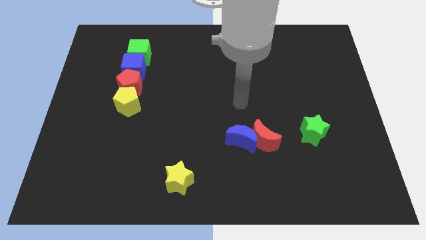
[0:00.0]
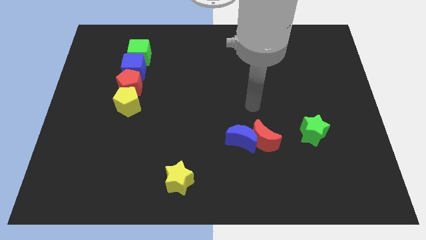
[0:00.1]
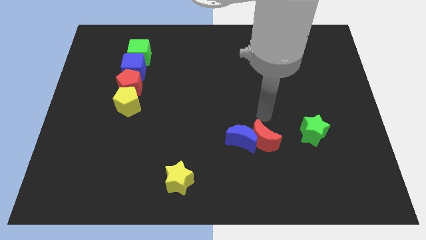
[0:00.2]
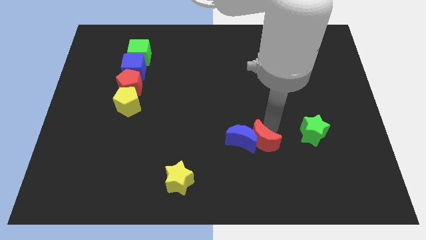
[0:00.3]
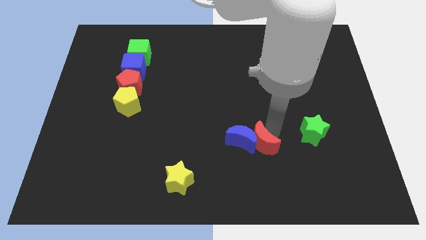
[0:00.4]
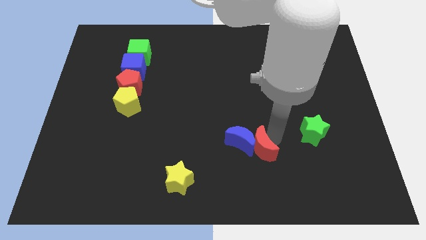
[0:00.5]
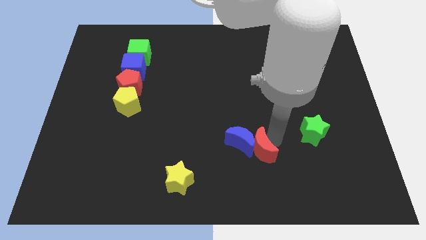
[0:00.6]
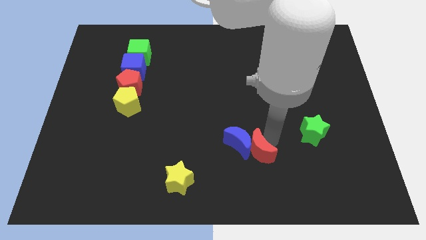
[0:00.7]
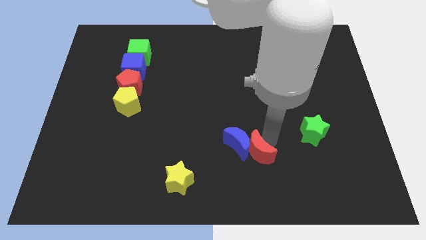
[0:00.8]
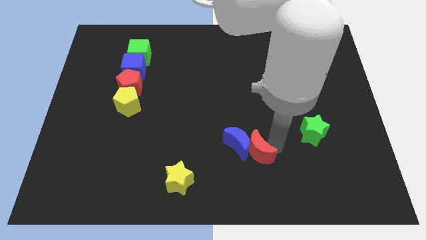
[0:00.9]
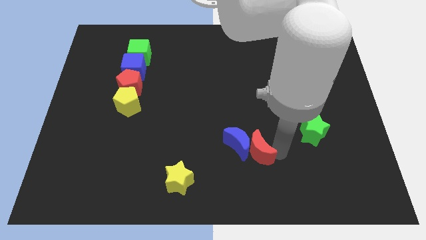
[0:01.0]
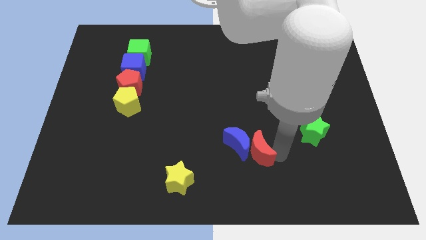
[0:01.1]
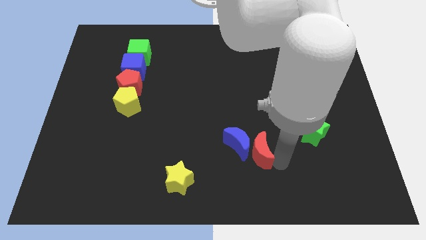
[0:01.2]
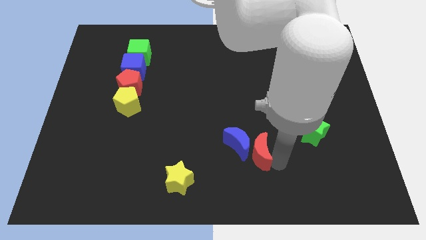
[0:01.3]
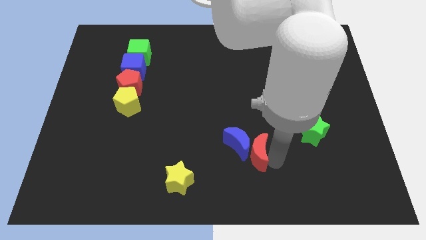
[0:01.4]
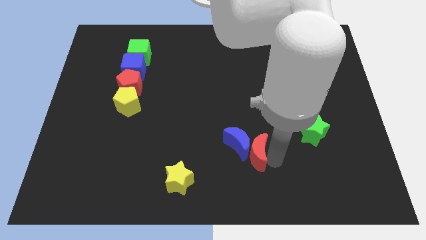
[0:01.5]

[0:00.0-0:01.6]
slightly push the red moon down

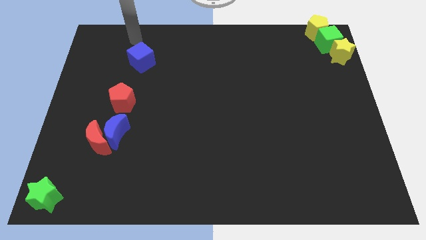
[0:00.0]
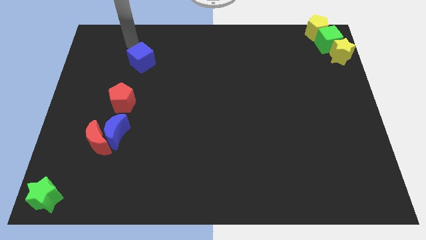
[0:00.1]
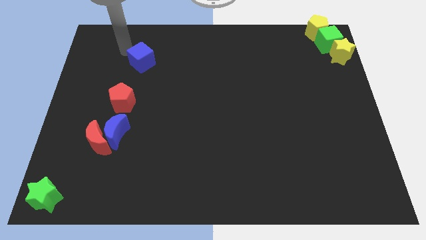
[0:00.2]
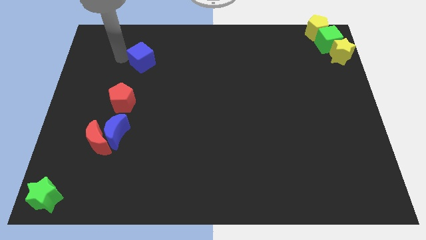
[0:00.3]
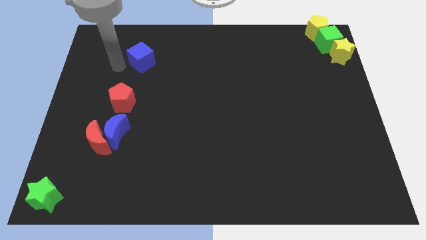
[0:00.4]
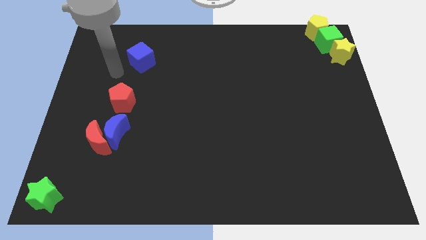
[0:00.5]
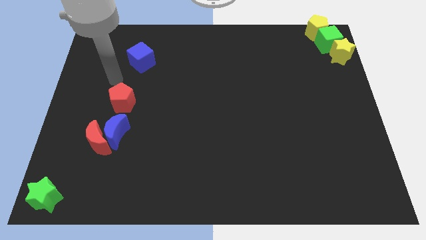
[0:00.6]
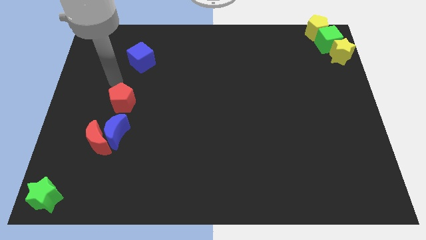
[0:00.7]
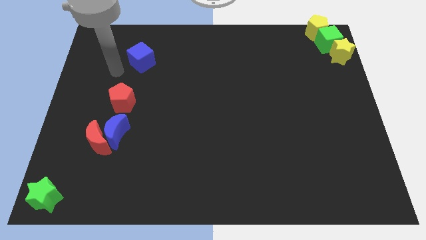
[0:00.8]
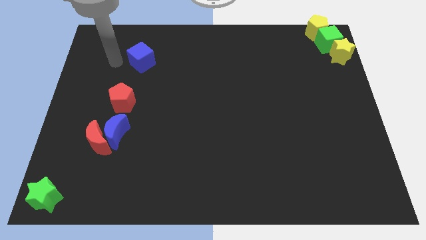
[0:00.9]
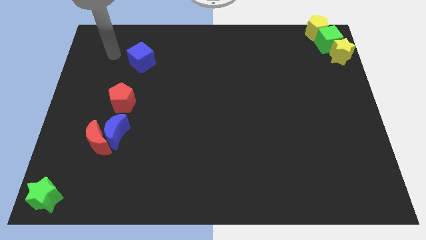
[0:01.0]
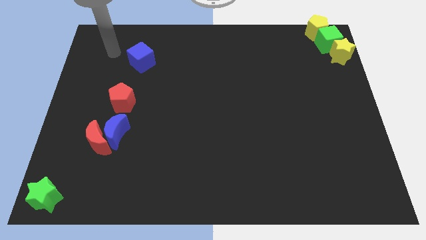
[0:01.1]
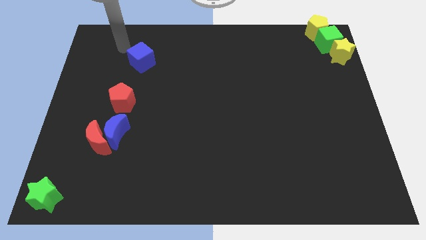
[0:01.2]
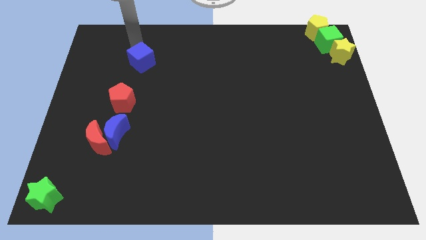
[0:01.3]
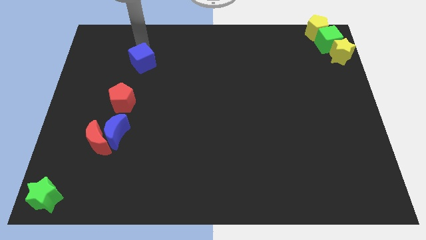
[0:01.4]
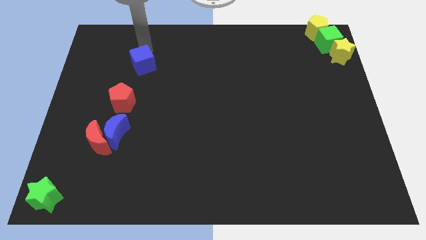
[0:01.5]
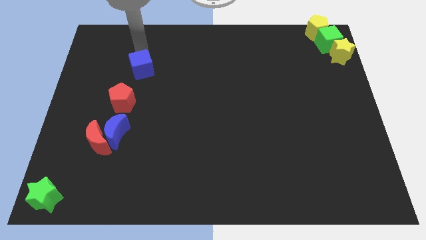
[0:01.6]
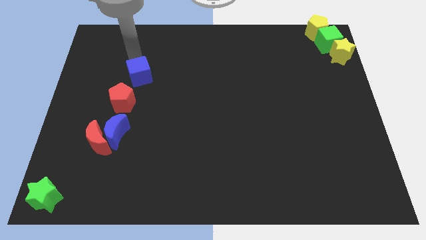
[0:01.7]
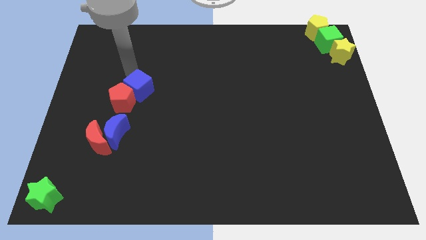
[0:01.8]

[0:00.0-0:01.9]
slightly move the blue cube towards down

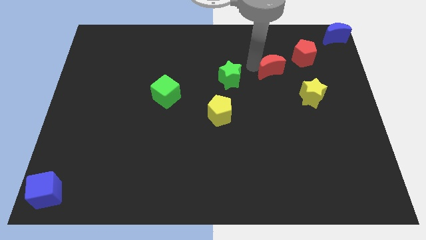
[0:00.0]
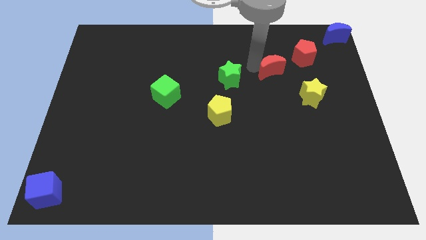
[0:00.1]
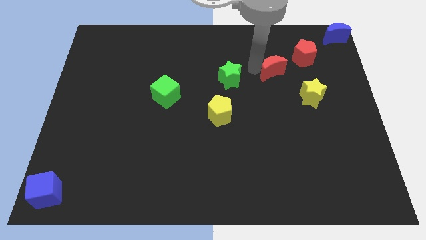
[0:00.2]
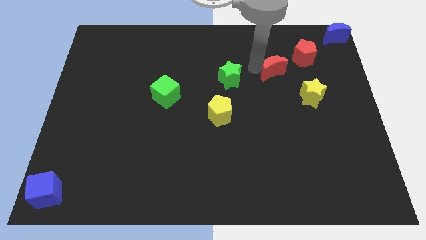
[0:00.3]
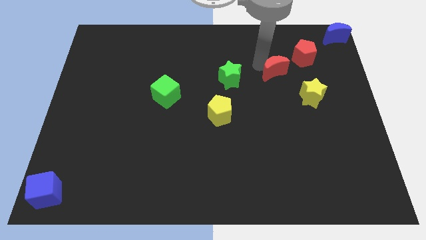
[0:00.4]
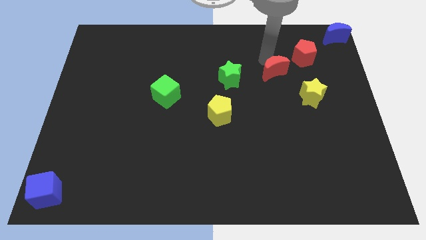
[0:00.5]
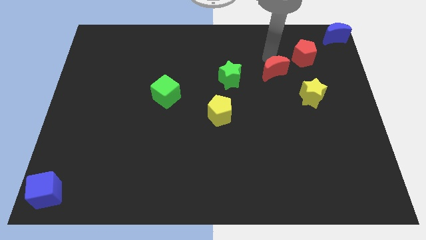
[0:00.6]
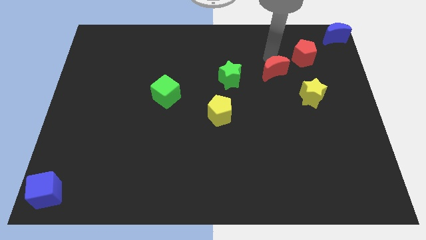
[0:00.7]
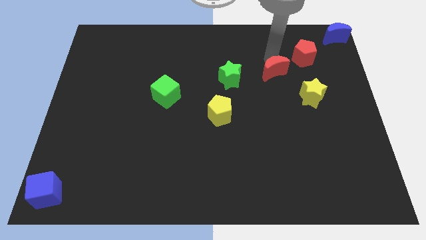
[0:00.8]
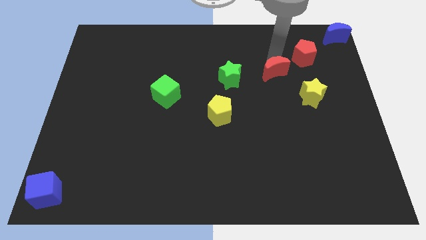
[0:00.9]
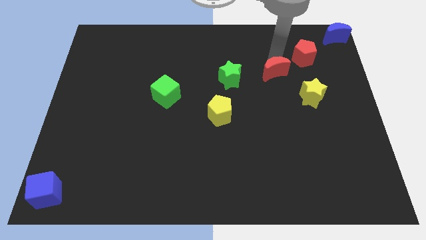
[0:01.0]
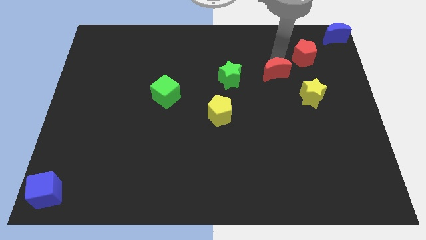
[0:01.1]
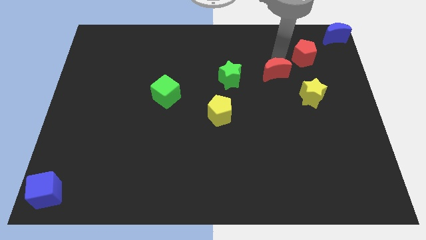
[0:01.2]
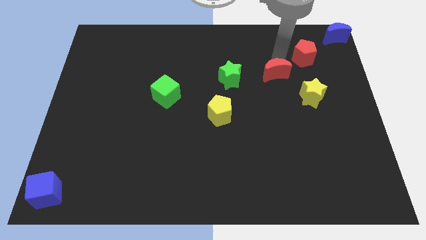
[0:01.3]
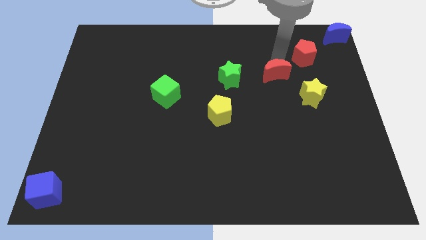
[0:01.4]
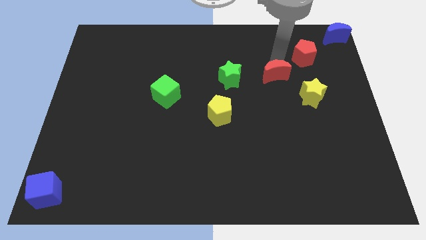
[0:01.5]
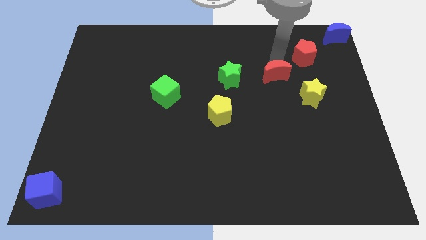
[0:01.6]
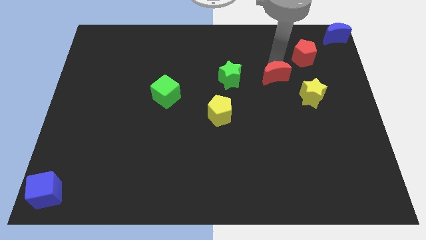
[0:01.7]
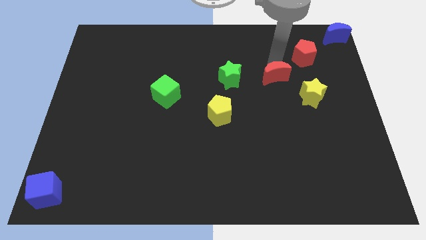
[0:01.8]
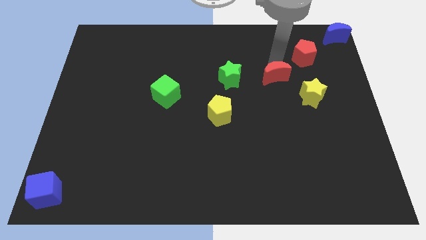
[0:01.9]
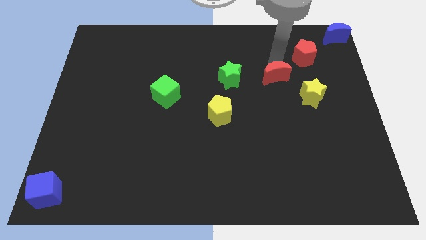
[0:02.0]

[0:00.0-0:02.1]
move the red moon near to the red pentagon

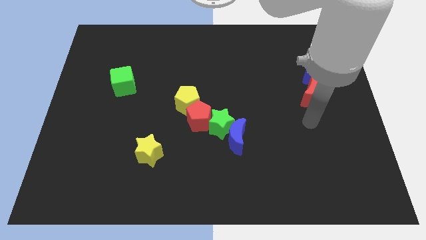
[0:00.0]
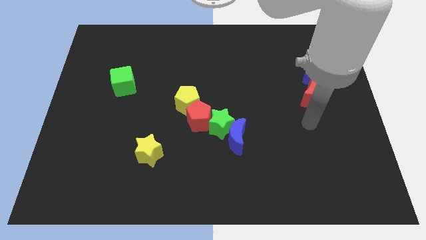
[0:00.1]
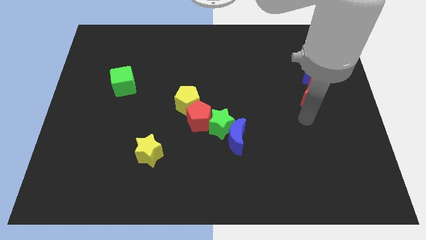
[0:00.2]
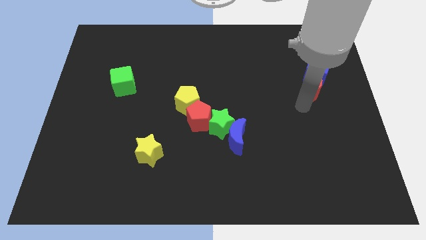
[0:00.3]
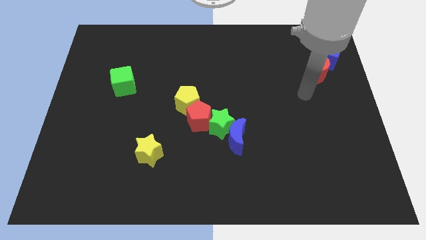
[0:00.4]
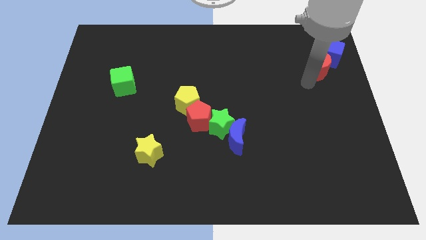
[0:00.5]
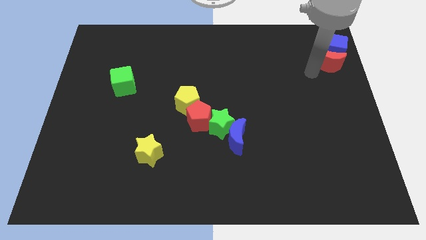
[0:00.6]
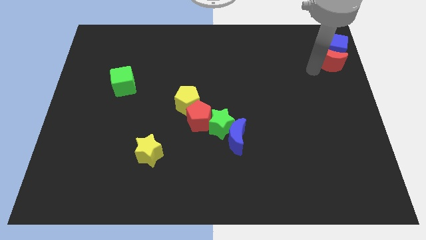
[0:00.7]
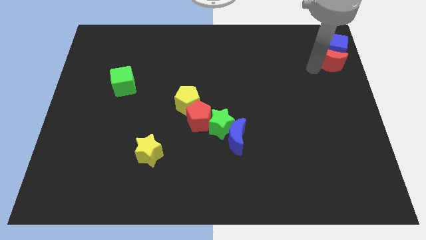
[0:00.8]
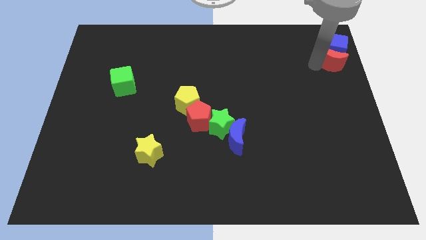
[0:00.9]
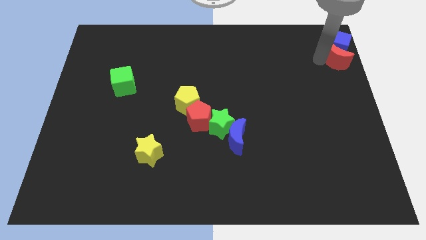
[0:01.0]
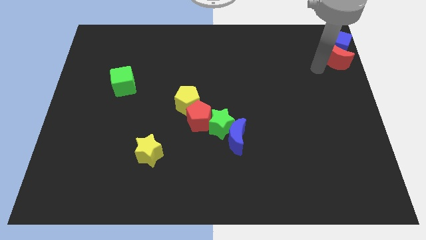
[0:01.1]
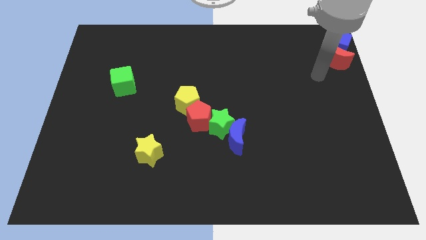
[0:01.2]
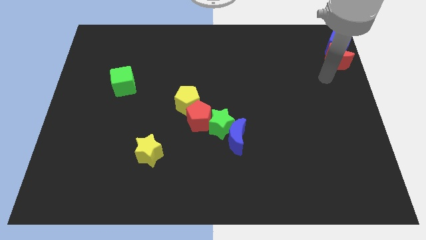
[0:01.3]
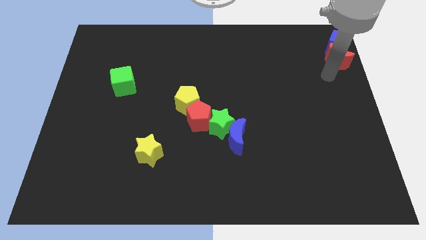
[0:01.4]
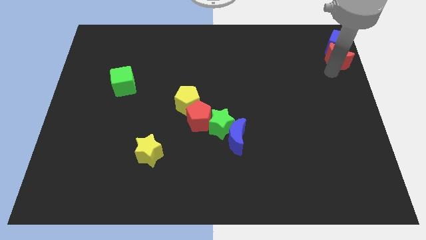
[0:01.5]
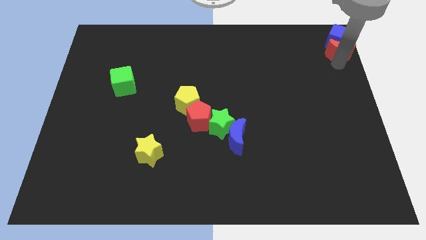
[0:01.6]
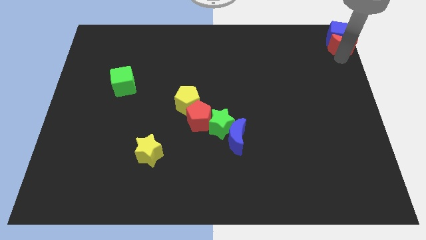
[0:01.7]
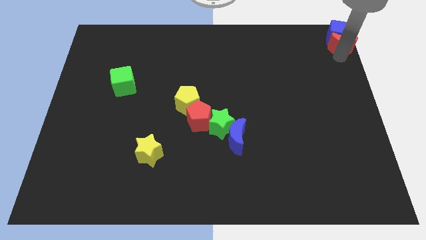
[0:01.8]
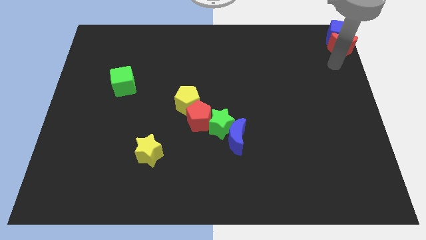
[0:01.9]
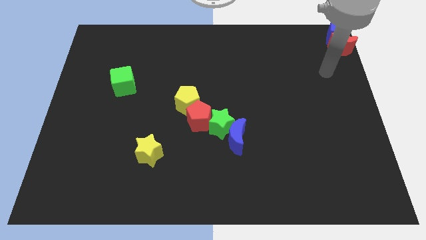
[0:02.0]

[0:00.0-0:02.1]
push the red moon with blue cube to the top right corner

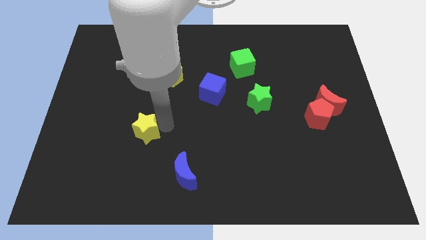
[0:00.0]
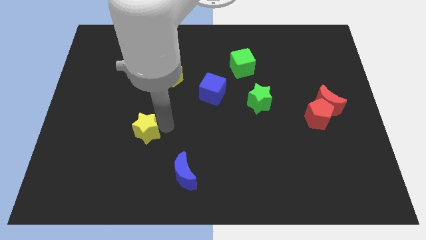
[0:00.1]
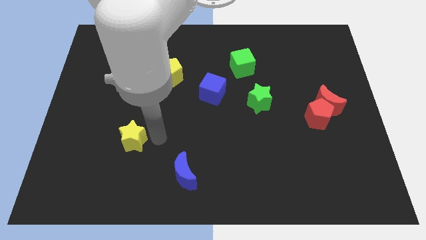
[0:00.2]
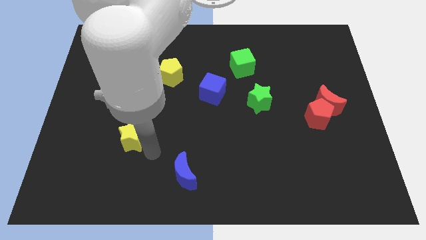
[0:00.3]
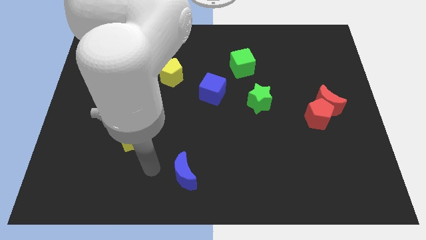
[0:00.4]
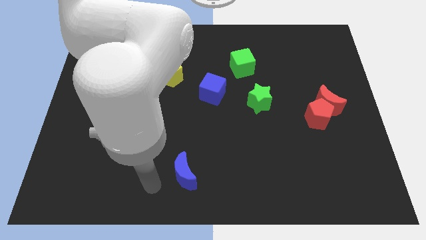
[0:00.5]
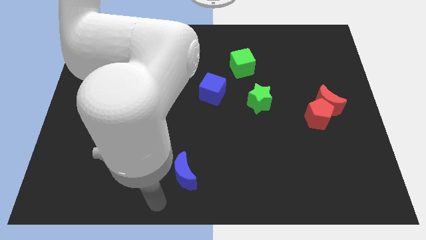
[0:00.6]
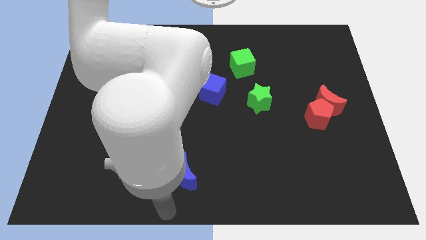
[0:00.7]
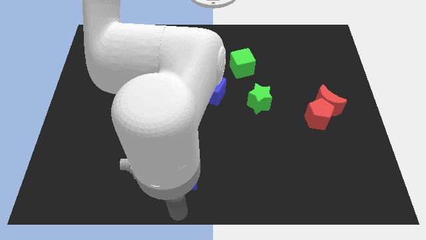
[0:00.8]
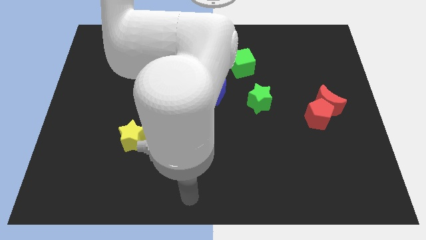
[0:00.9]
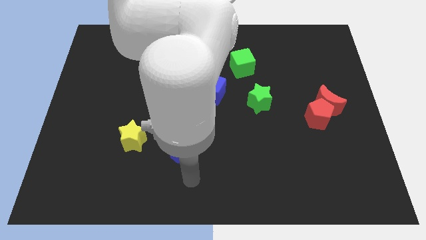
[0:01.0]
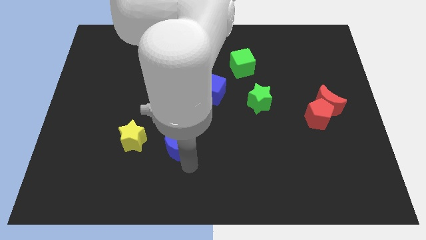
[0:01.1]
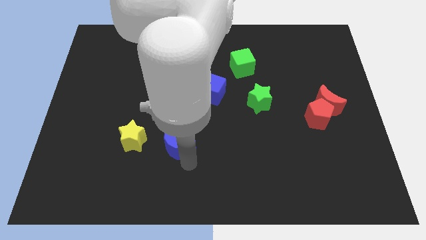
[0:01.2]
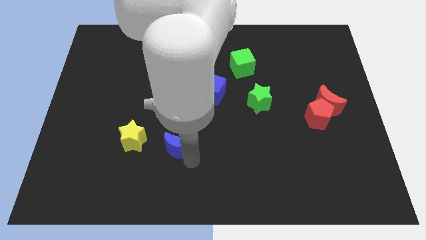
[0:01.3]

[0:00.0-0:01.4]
point your arm below blue moon

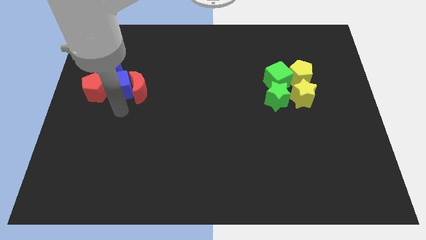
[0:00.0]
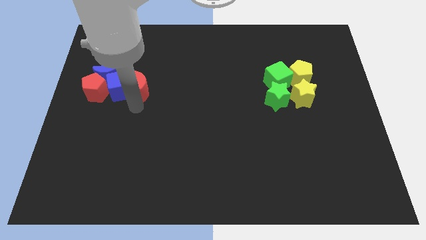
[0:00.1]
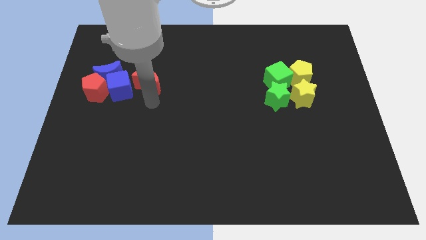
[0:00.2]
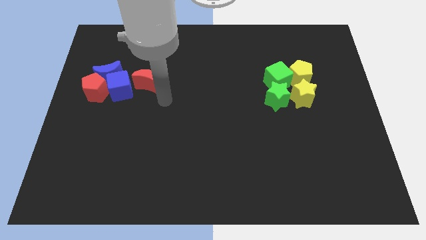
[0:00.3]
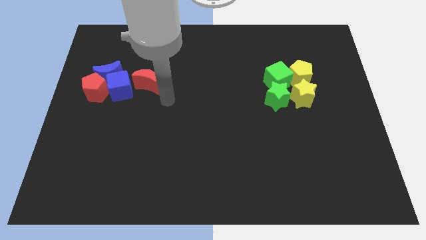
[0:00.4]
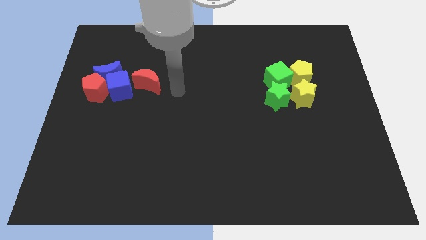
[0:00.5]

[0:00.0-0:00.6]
move the red moon slightly towards up
